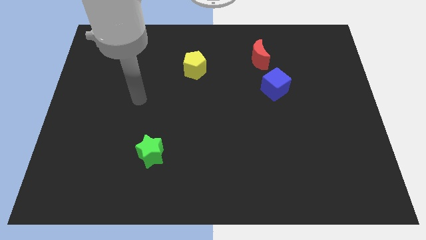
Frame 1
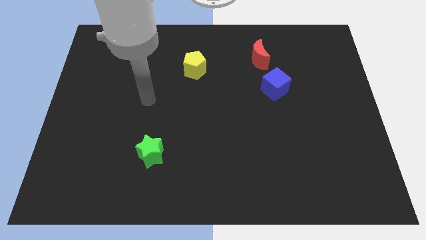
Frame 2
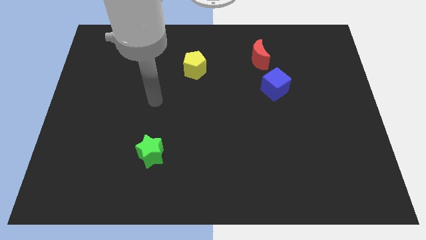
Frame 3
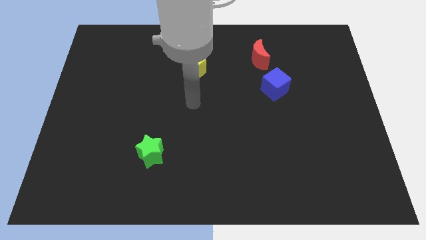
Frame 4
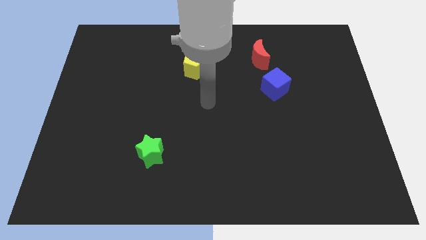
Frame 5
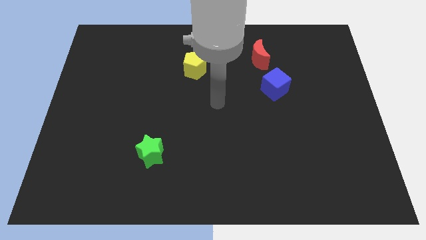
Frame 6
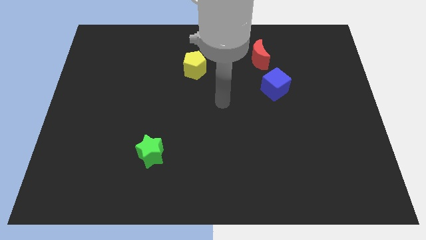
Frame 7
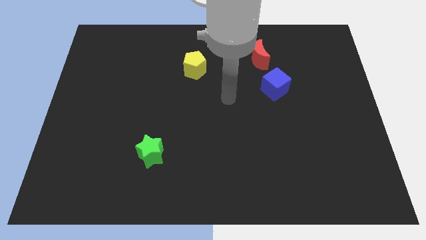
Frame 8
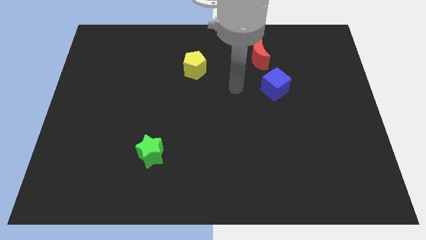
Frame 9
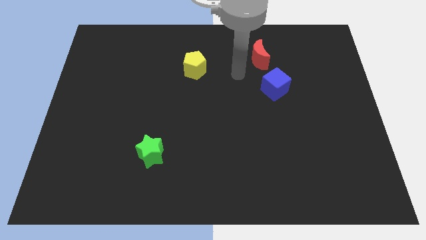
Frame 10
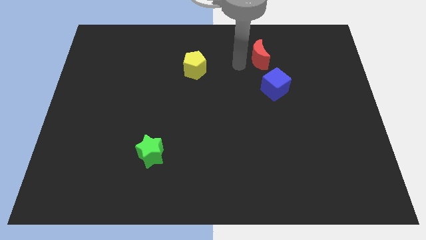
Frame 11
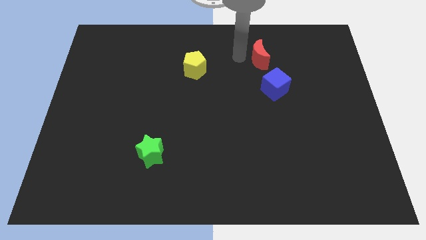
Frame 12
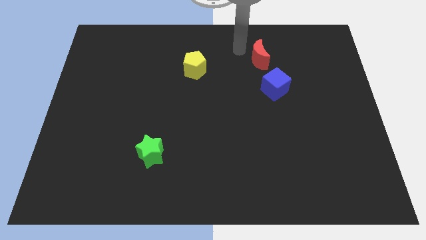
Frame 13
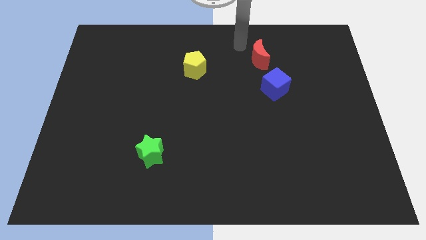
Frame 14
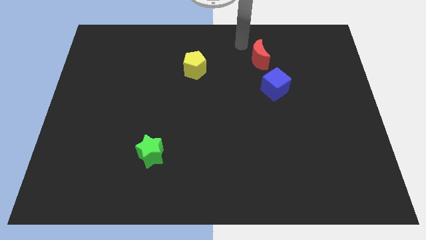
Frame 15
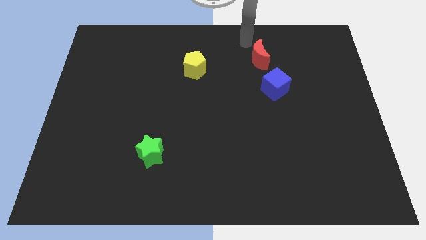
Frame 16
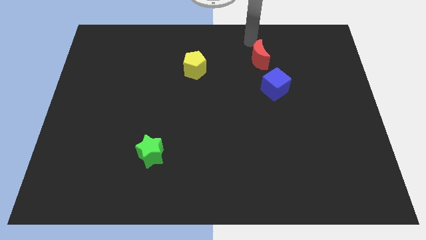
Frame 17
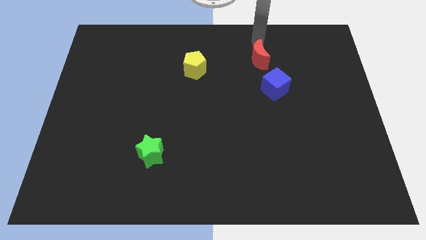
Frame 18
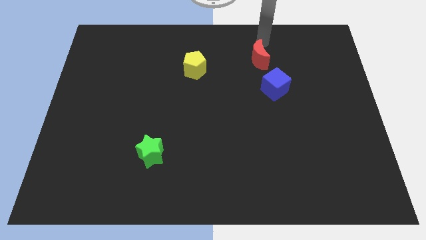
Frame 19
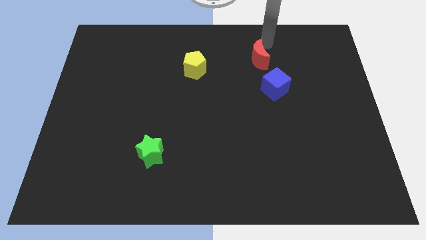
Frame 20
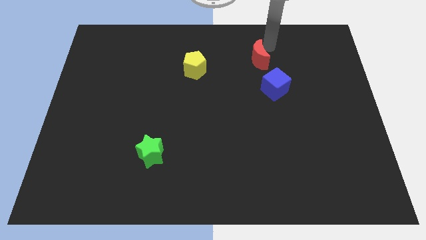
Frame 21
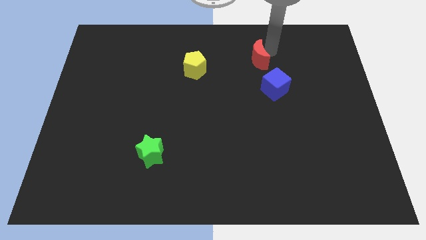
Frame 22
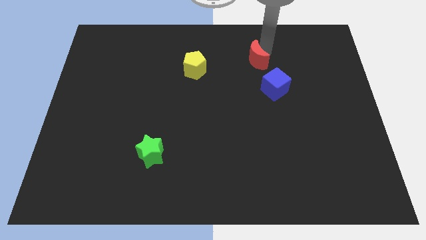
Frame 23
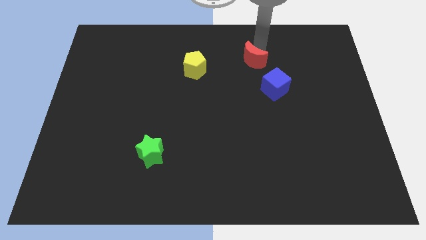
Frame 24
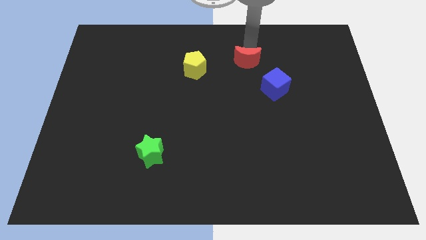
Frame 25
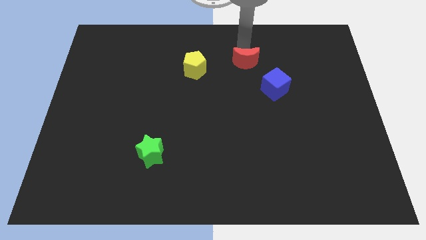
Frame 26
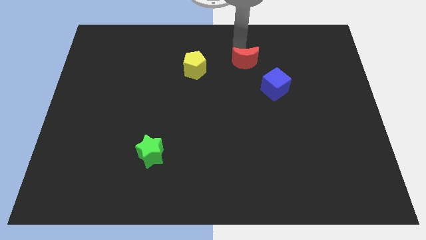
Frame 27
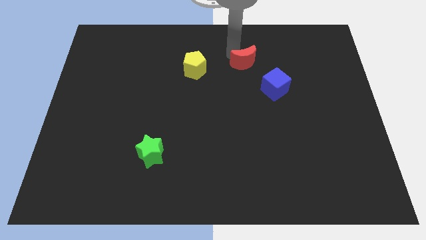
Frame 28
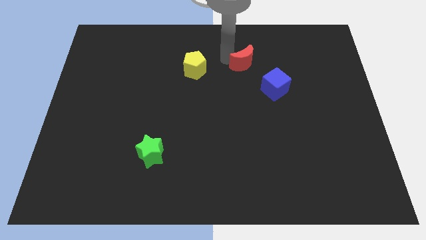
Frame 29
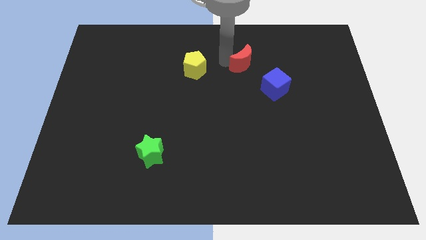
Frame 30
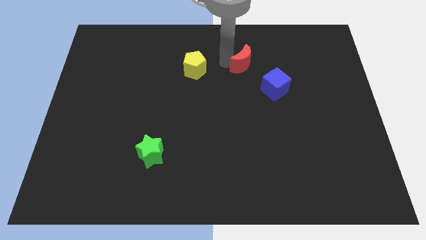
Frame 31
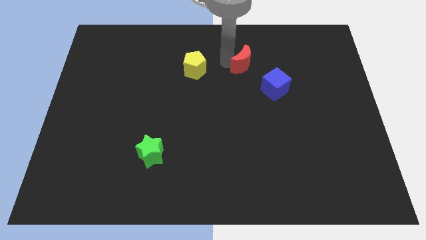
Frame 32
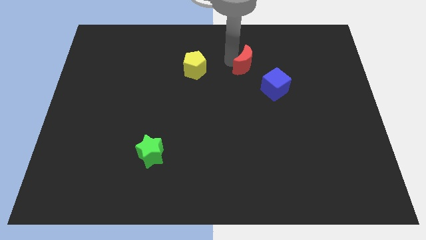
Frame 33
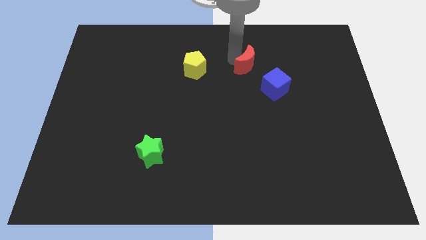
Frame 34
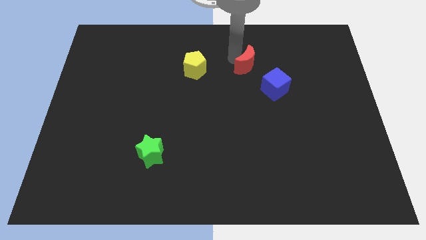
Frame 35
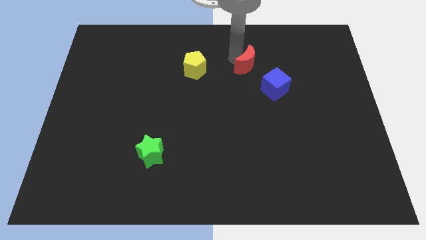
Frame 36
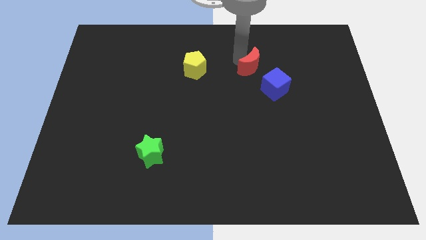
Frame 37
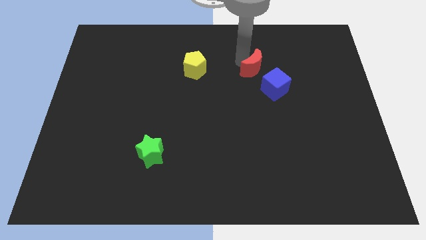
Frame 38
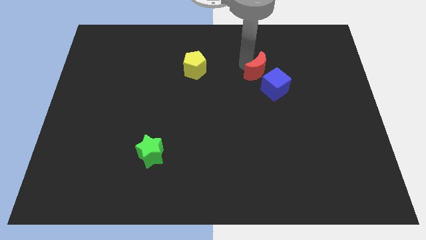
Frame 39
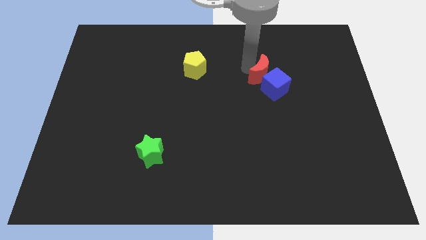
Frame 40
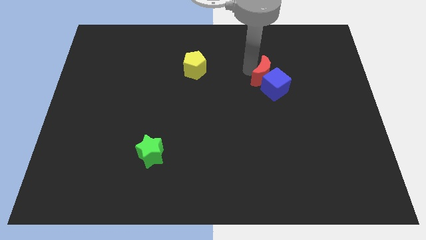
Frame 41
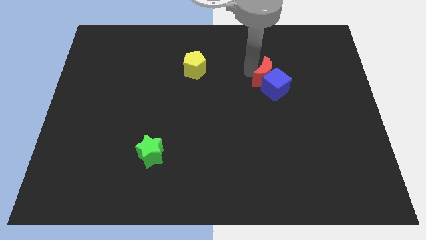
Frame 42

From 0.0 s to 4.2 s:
move the moon to the blue block

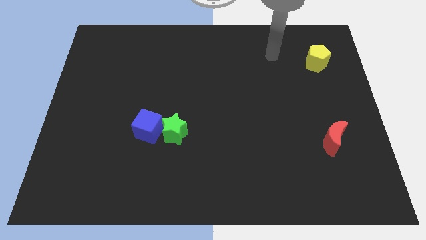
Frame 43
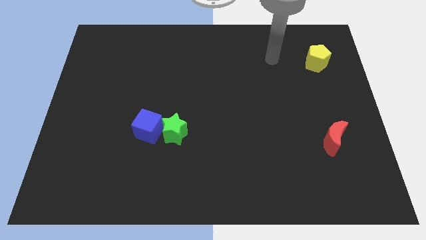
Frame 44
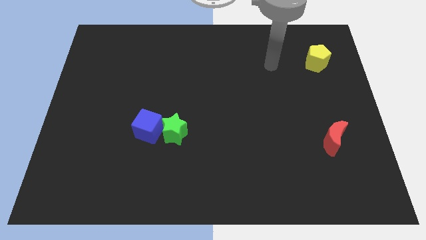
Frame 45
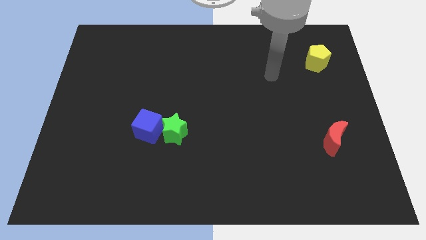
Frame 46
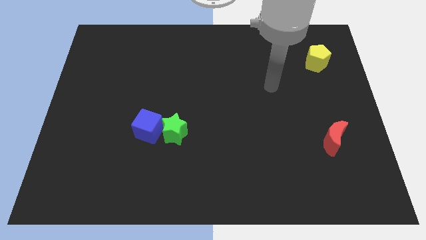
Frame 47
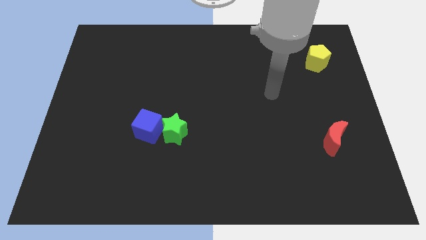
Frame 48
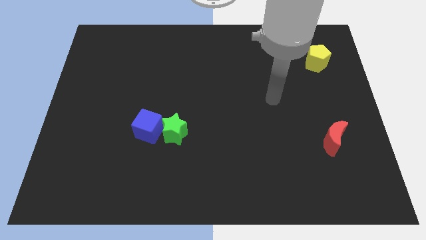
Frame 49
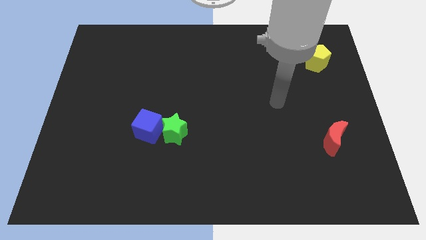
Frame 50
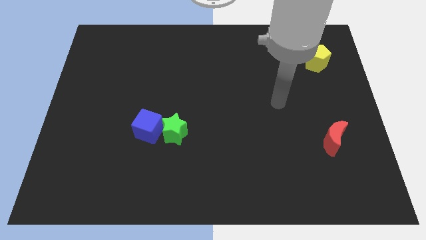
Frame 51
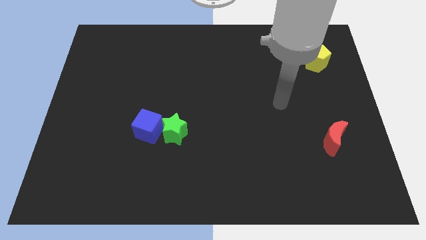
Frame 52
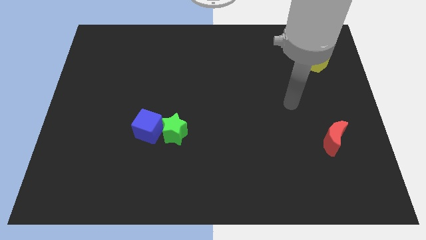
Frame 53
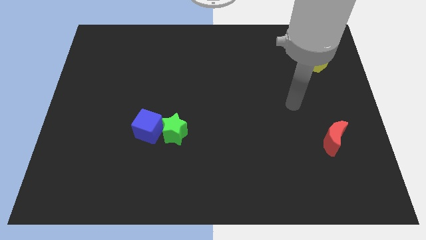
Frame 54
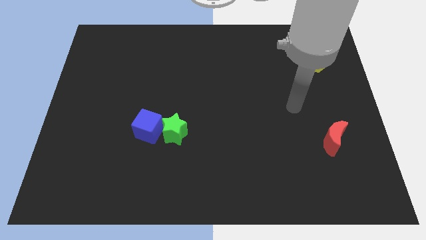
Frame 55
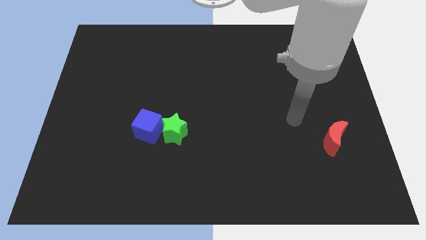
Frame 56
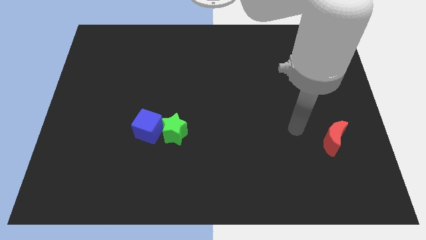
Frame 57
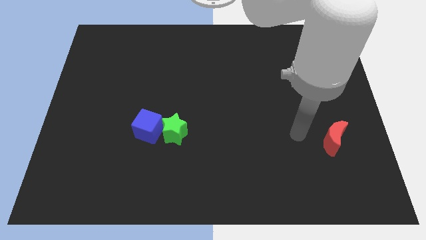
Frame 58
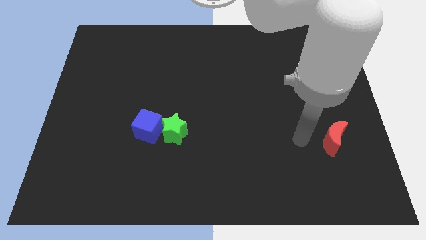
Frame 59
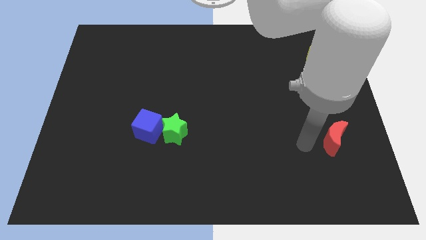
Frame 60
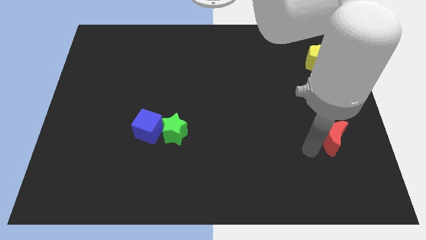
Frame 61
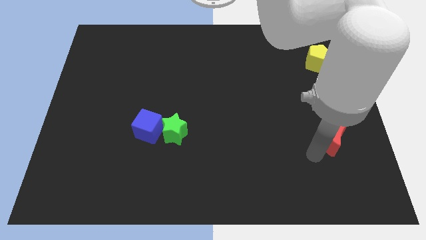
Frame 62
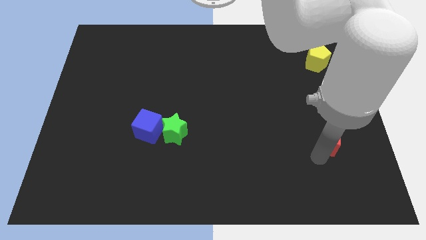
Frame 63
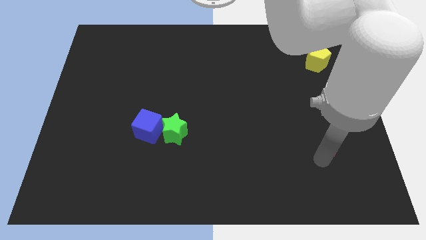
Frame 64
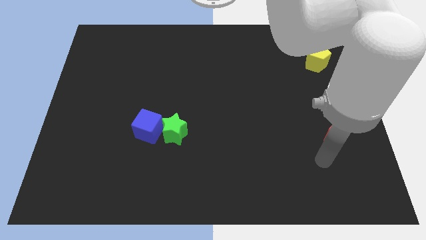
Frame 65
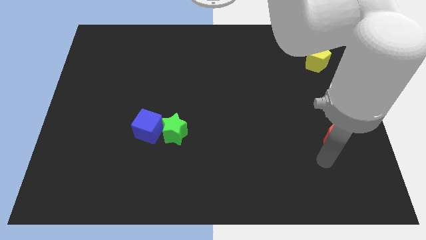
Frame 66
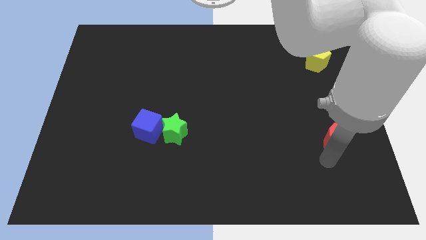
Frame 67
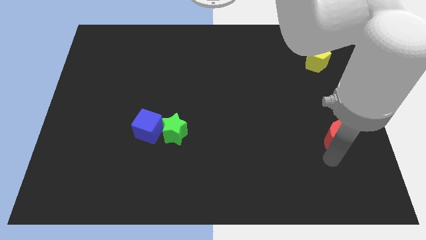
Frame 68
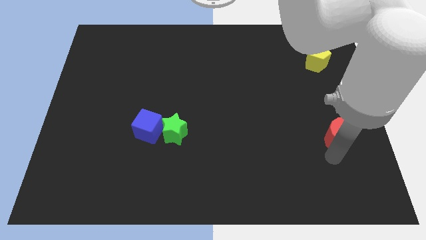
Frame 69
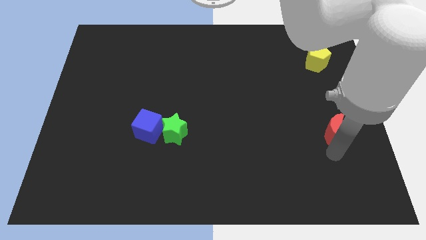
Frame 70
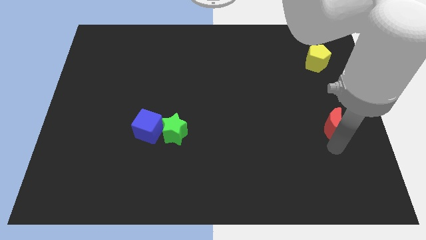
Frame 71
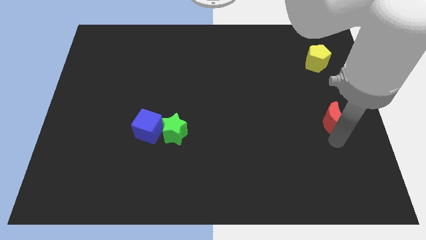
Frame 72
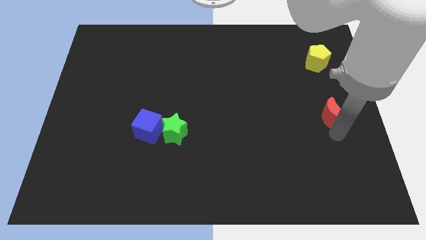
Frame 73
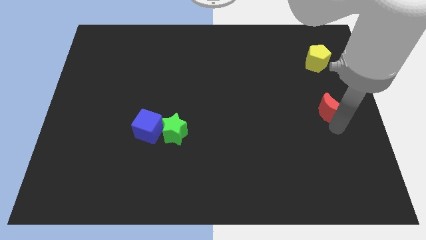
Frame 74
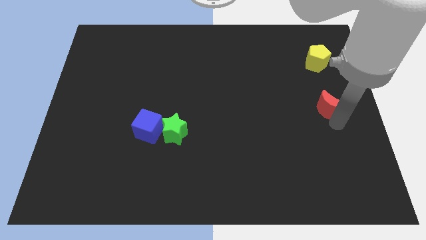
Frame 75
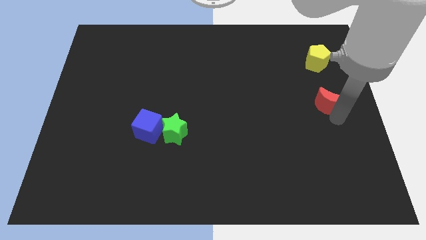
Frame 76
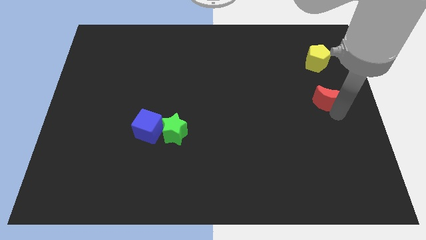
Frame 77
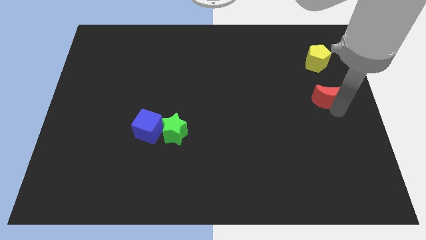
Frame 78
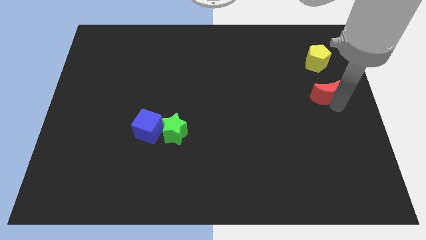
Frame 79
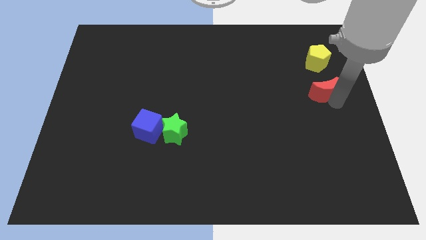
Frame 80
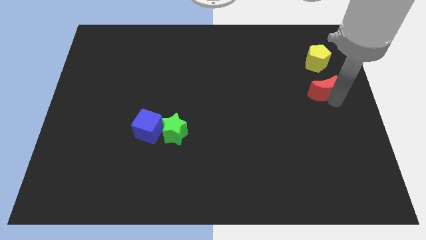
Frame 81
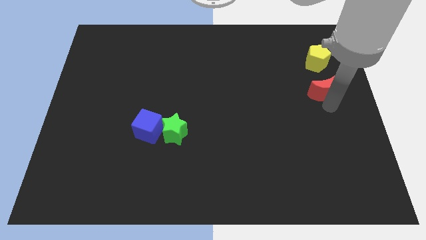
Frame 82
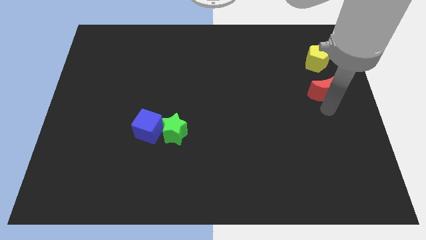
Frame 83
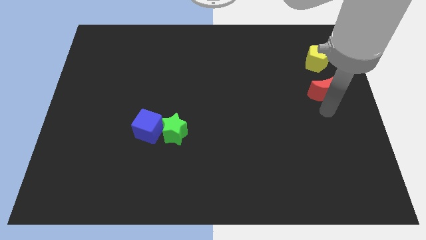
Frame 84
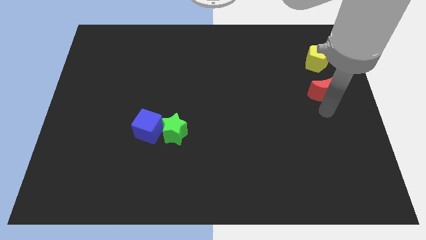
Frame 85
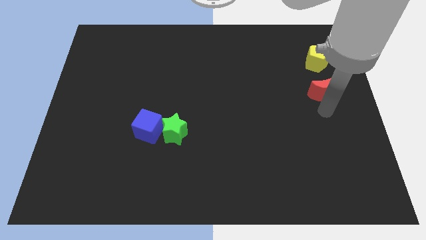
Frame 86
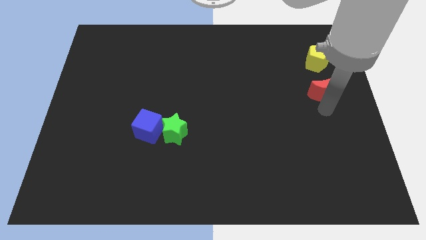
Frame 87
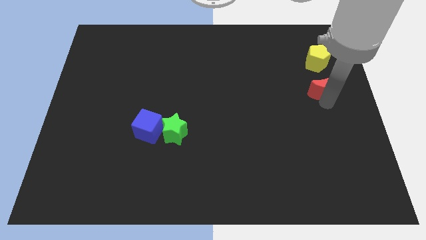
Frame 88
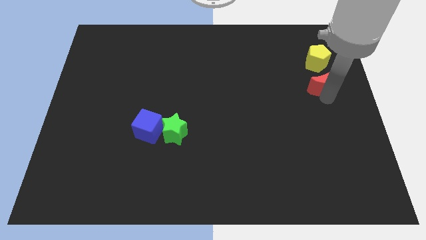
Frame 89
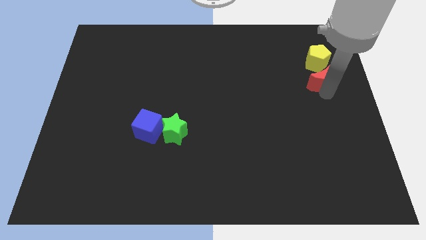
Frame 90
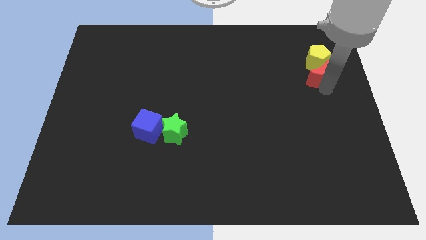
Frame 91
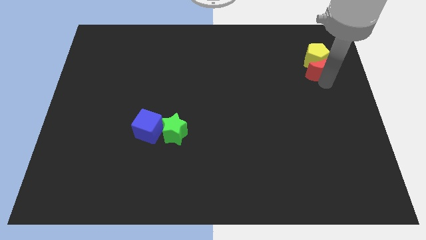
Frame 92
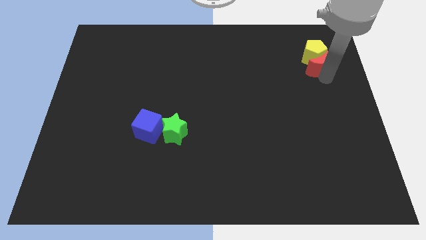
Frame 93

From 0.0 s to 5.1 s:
push the red block to the yellow pentagon
